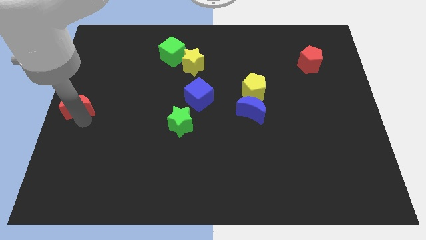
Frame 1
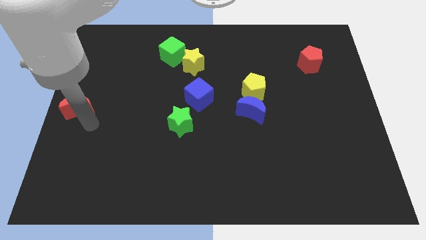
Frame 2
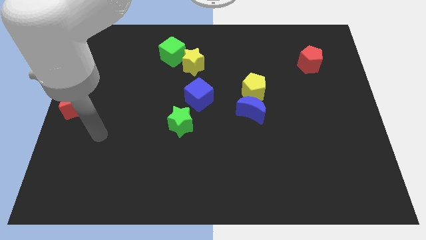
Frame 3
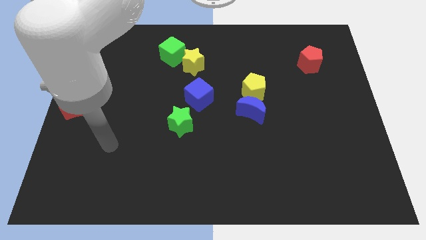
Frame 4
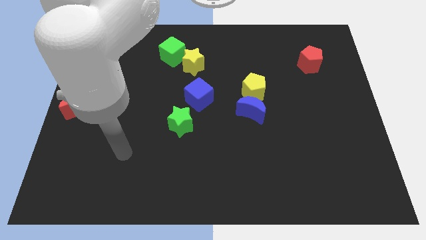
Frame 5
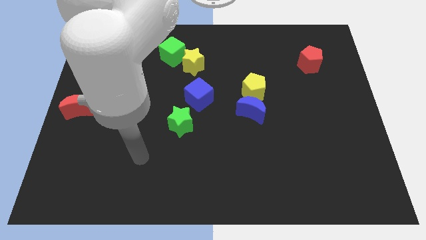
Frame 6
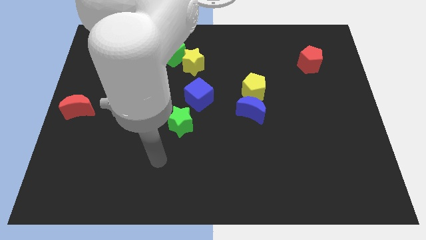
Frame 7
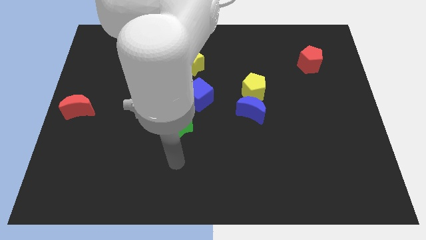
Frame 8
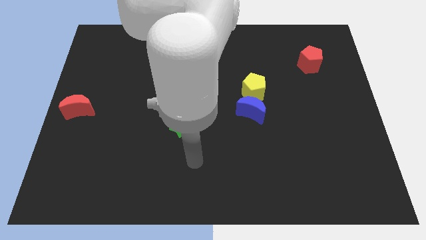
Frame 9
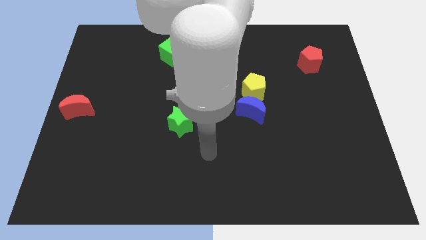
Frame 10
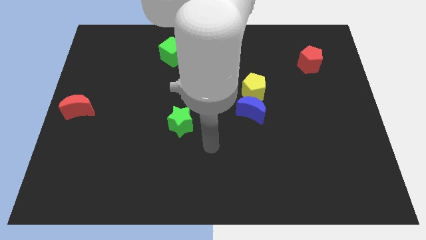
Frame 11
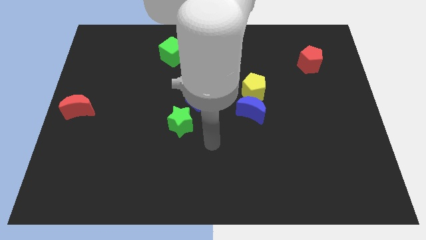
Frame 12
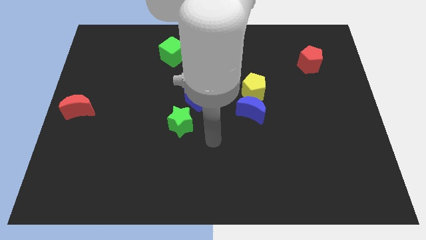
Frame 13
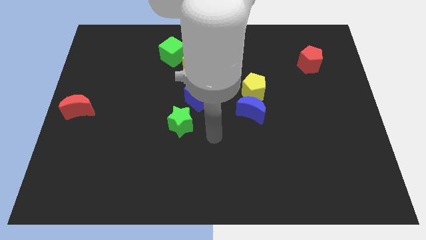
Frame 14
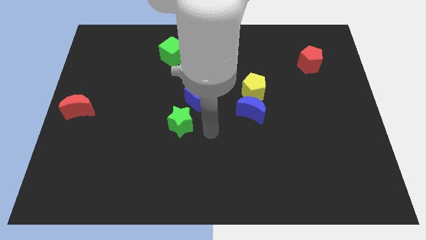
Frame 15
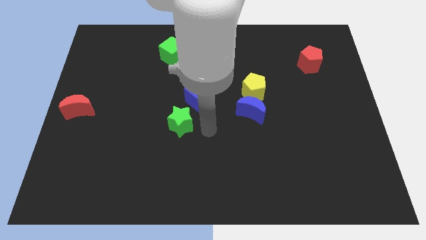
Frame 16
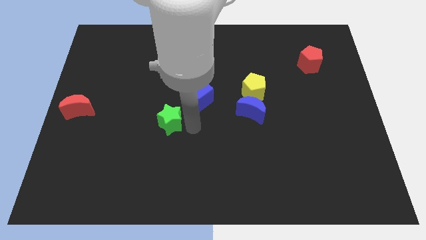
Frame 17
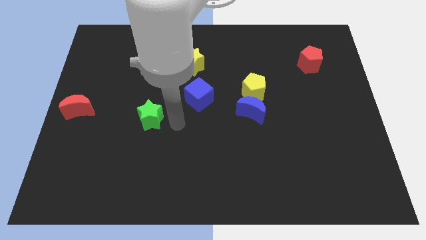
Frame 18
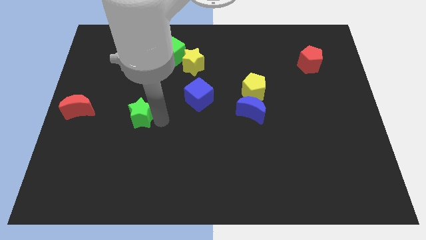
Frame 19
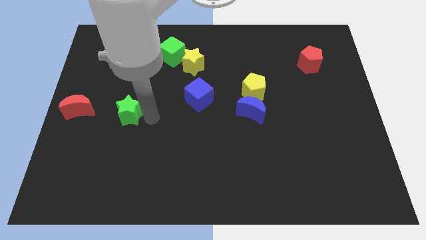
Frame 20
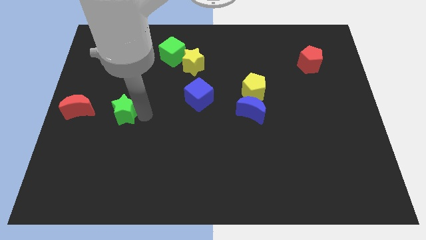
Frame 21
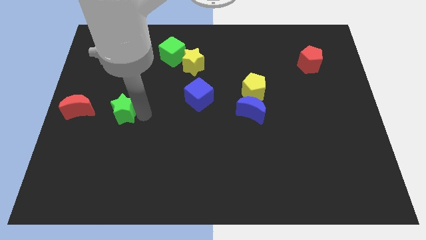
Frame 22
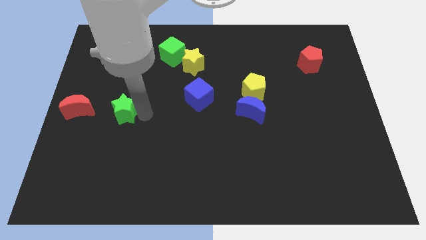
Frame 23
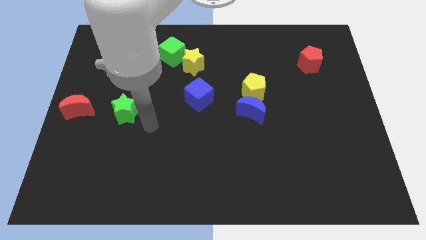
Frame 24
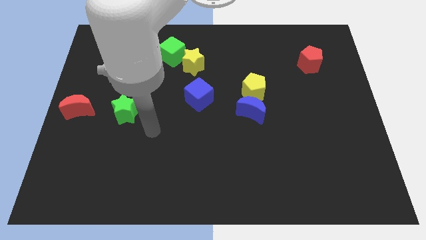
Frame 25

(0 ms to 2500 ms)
push the green star closer to the red moon

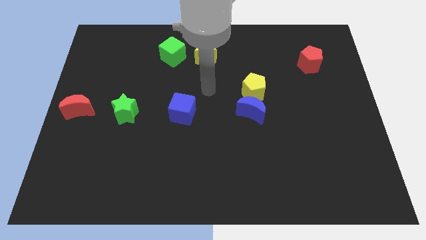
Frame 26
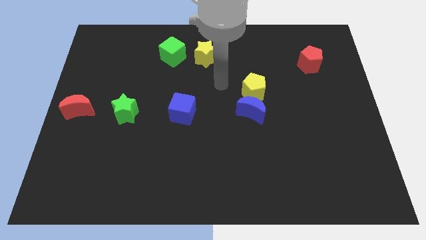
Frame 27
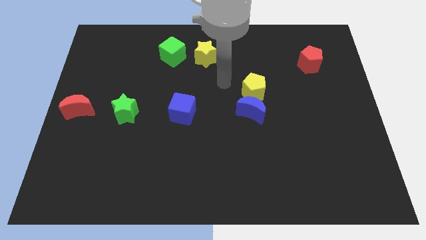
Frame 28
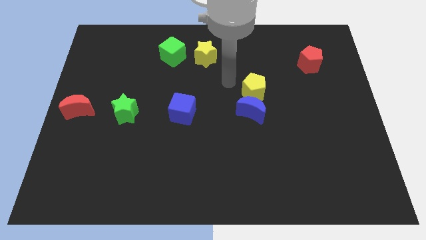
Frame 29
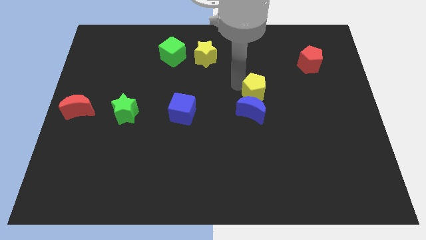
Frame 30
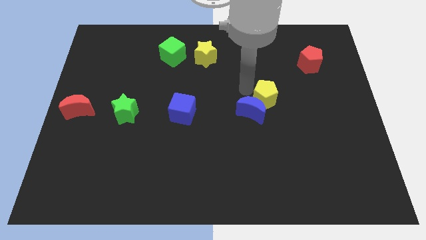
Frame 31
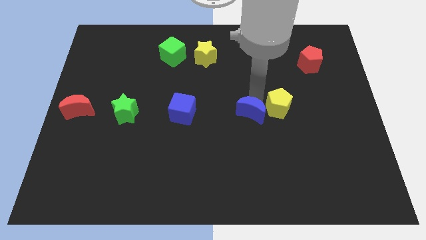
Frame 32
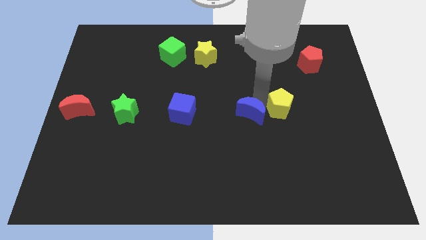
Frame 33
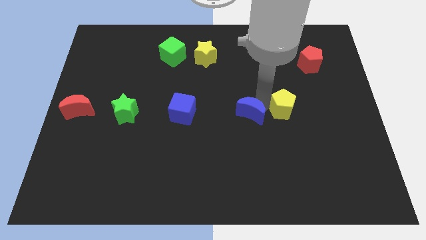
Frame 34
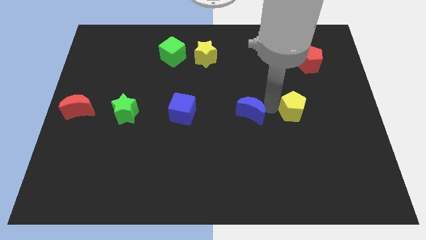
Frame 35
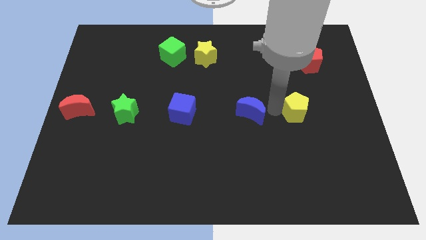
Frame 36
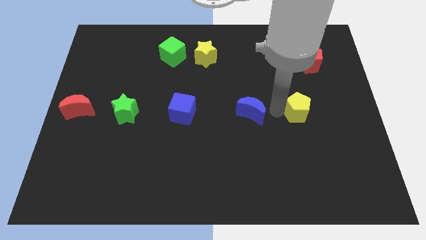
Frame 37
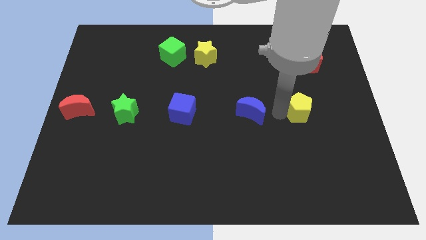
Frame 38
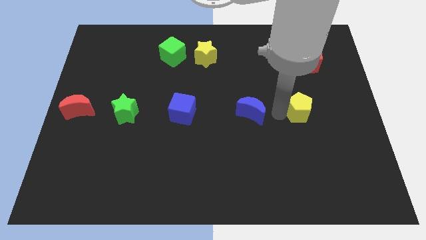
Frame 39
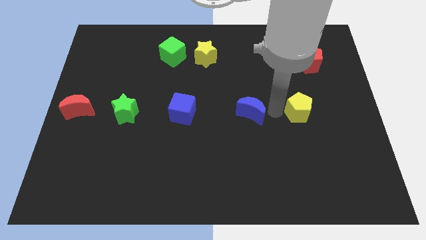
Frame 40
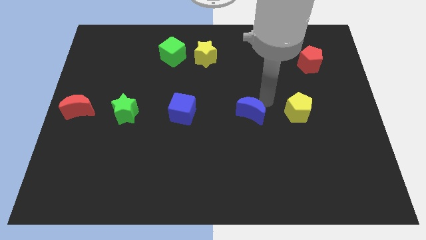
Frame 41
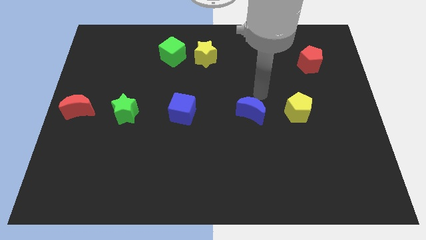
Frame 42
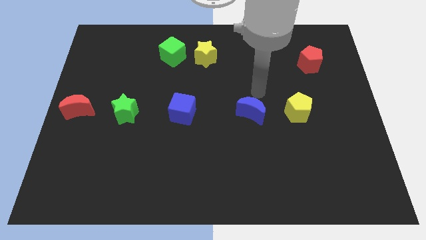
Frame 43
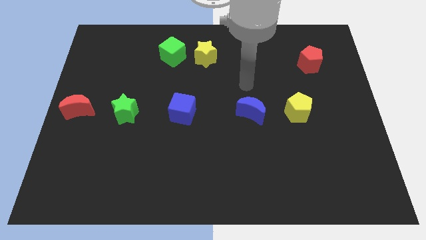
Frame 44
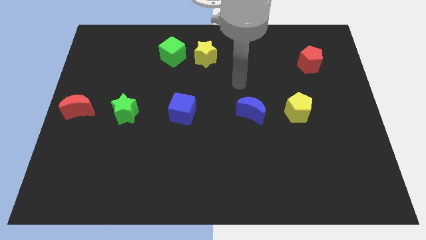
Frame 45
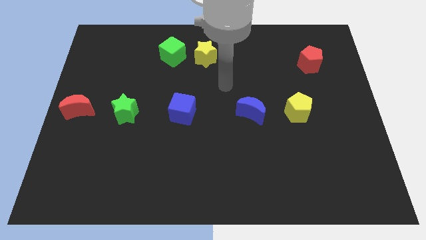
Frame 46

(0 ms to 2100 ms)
move yellow pentagon to the center right

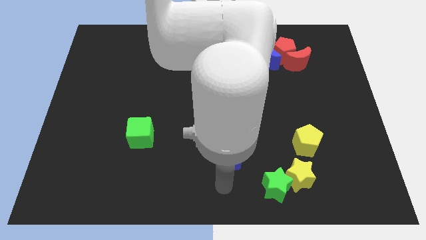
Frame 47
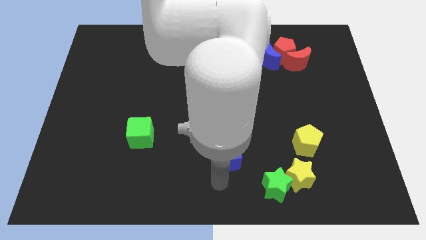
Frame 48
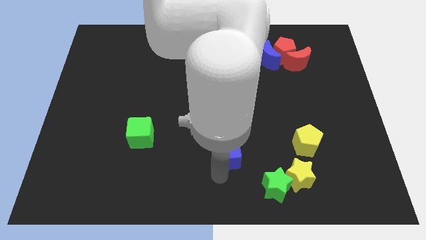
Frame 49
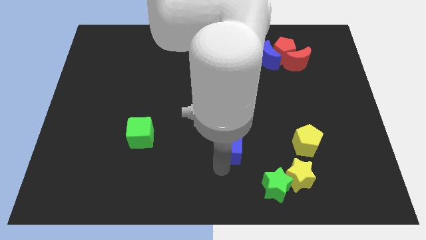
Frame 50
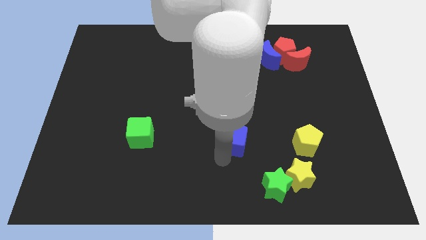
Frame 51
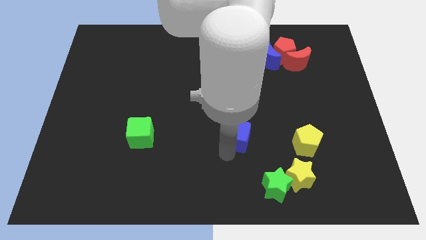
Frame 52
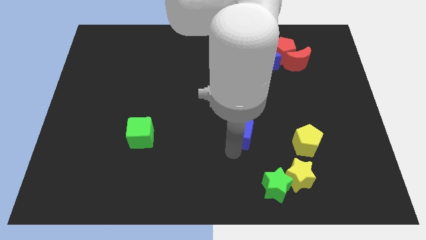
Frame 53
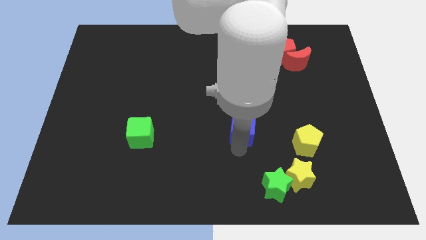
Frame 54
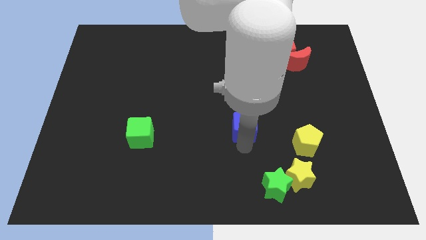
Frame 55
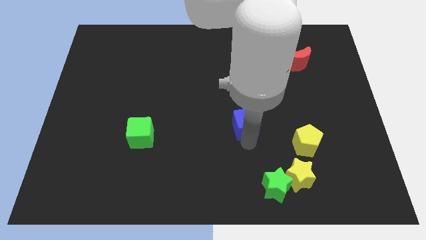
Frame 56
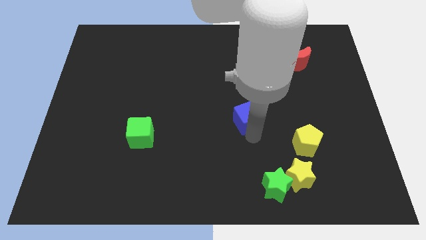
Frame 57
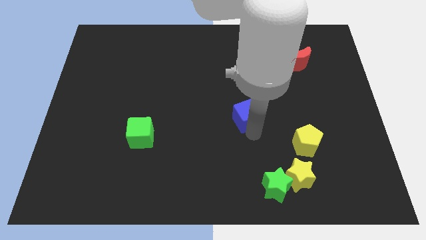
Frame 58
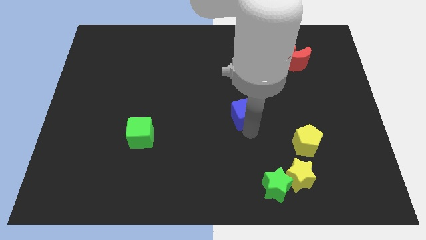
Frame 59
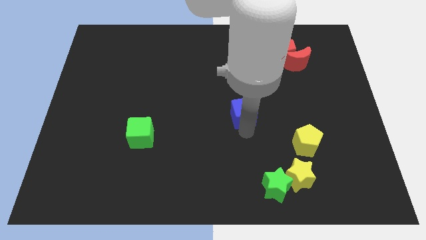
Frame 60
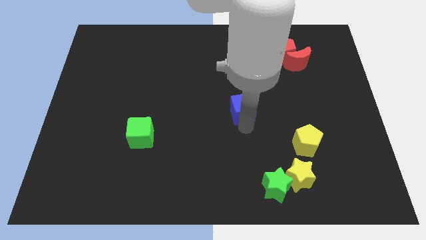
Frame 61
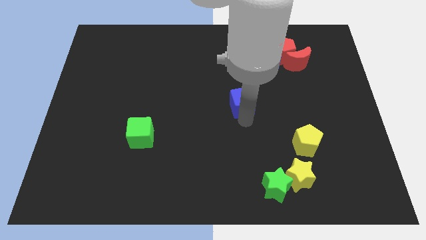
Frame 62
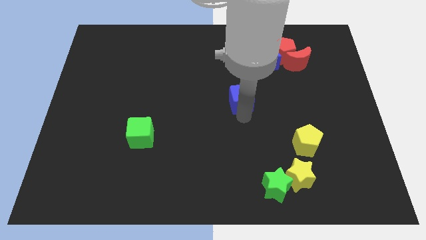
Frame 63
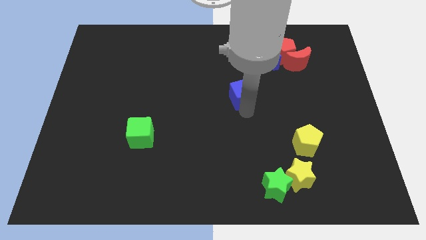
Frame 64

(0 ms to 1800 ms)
push the blue cube towards the blue crescent

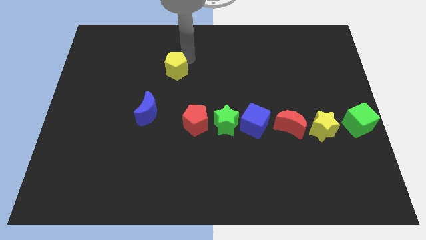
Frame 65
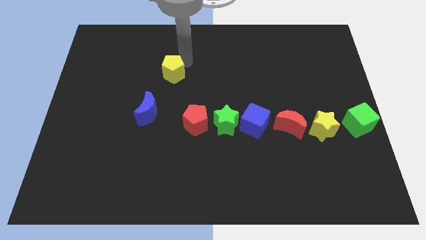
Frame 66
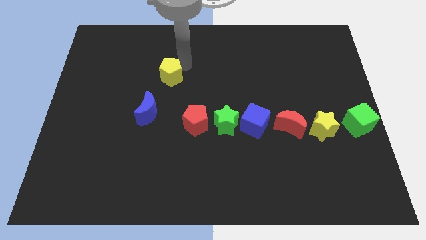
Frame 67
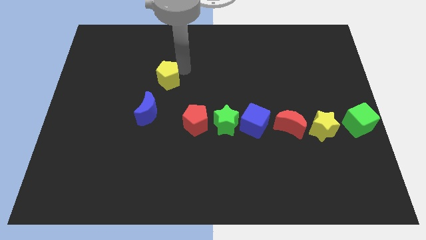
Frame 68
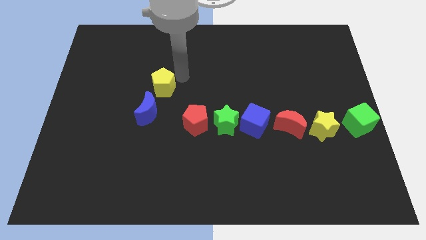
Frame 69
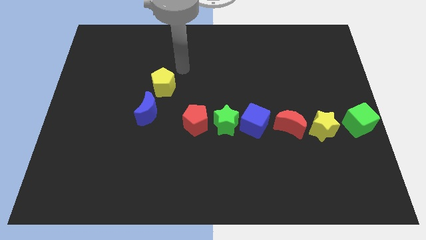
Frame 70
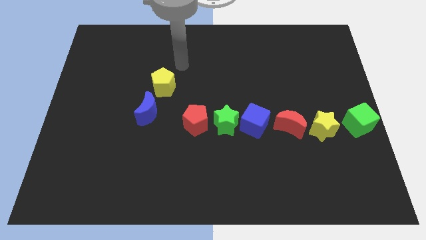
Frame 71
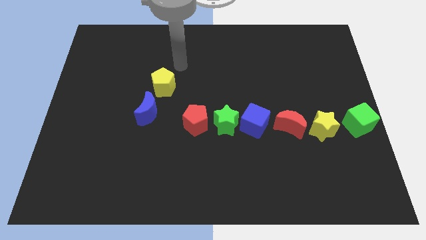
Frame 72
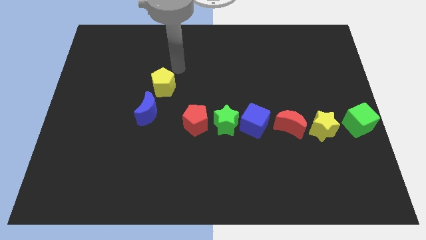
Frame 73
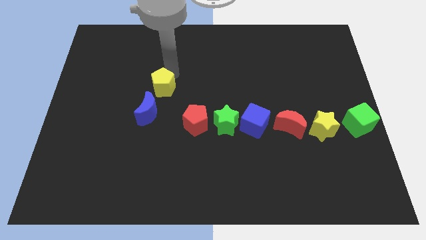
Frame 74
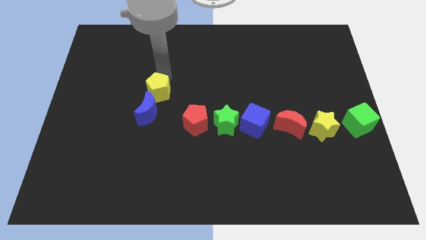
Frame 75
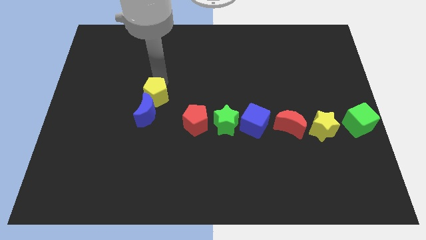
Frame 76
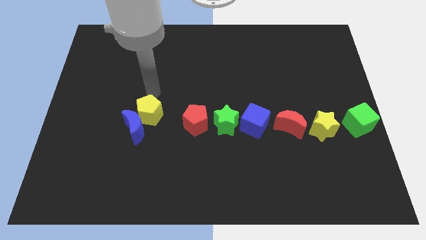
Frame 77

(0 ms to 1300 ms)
move the yellow pentagon into the top side of the blue moon

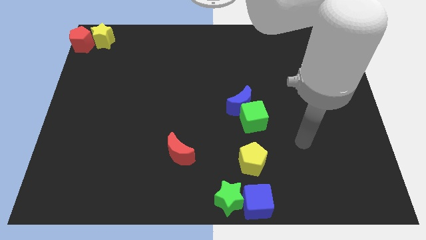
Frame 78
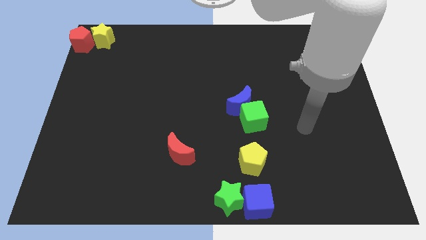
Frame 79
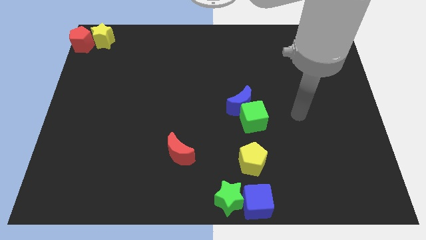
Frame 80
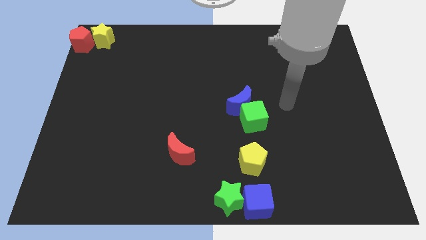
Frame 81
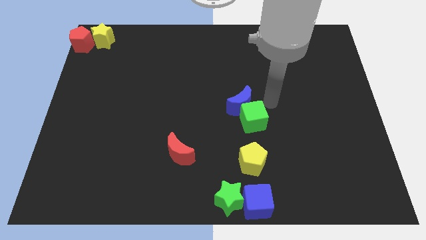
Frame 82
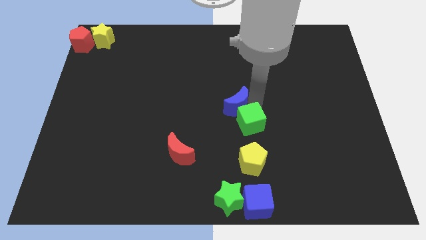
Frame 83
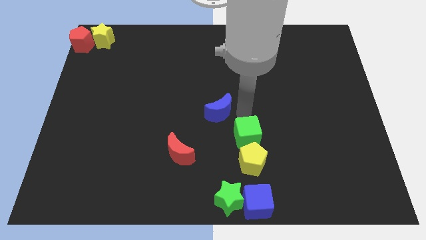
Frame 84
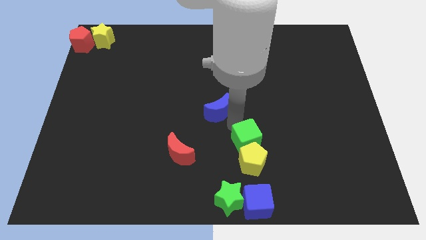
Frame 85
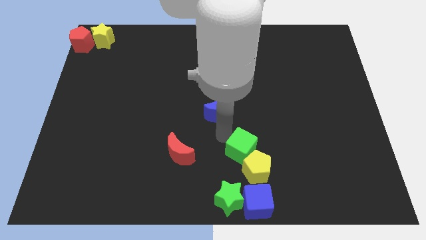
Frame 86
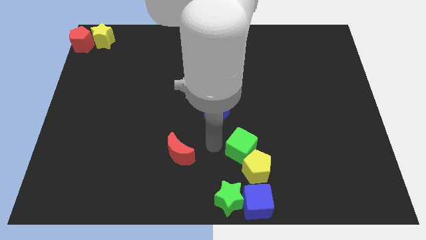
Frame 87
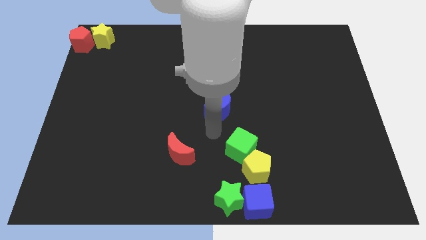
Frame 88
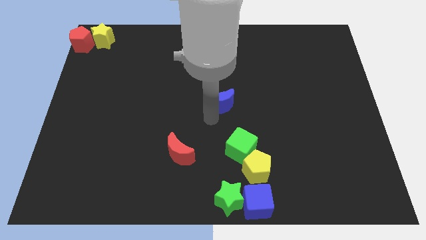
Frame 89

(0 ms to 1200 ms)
push the green cube into the yellow pentagon
